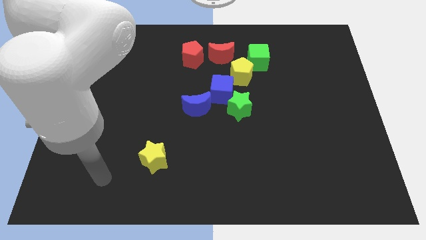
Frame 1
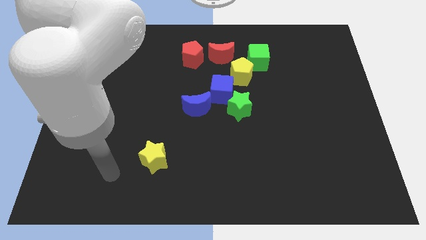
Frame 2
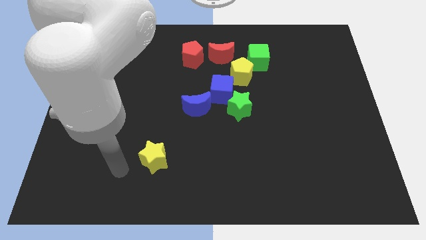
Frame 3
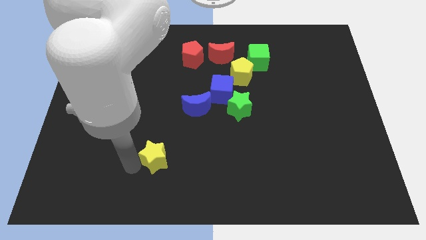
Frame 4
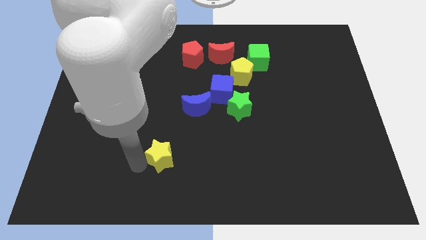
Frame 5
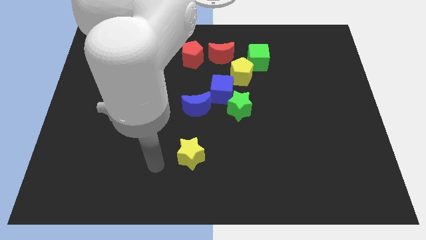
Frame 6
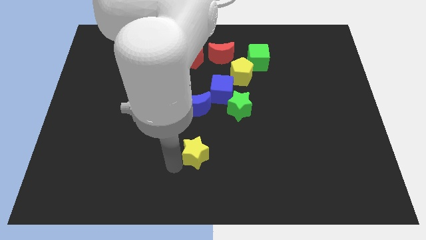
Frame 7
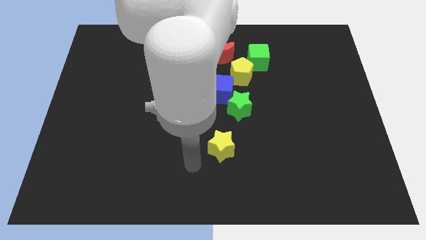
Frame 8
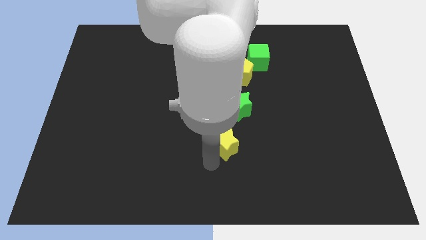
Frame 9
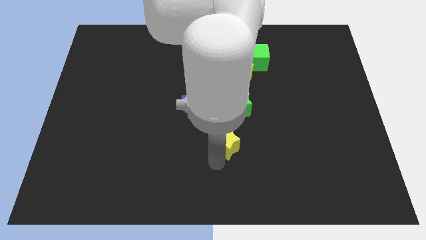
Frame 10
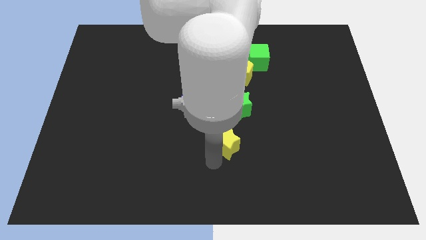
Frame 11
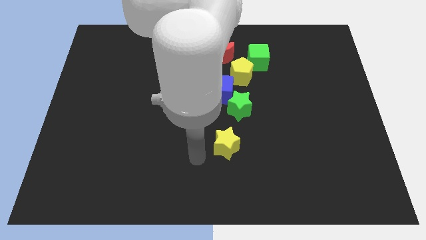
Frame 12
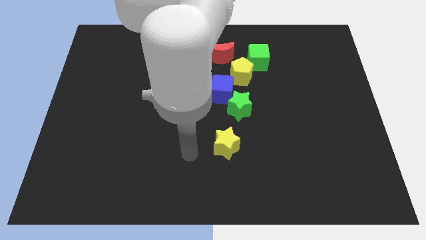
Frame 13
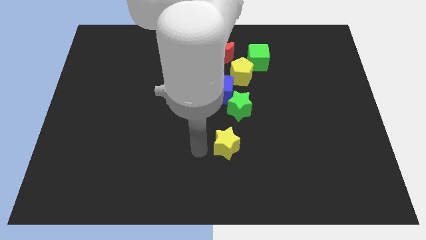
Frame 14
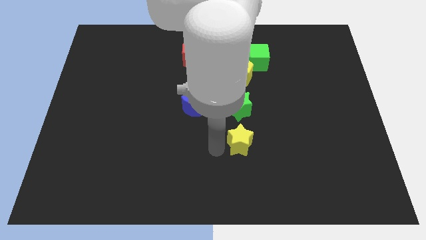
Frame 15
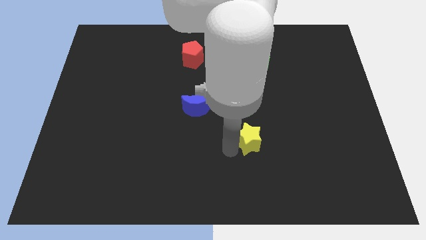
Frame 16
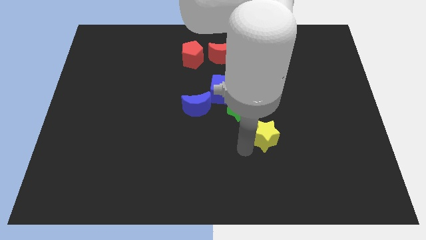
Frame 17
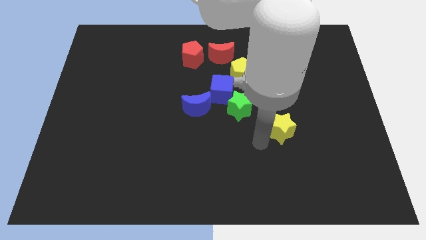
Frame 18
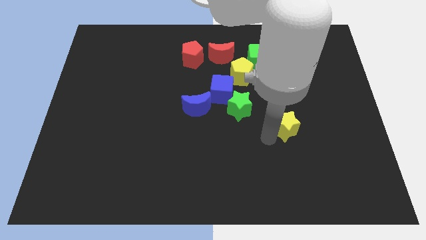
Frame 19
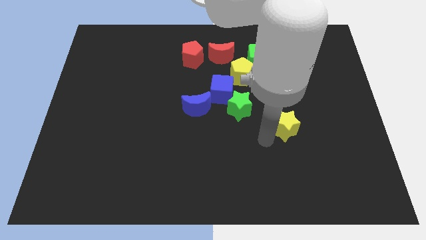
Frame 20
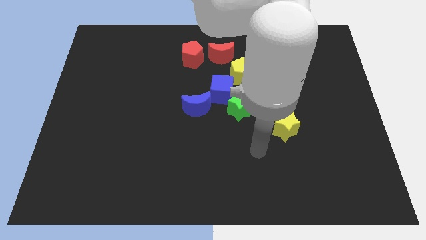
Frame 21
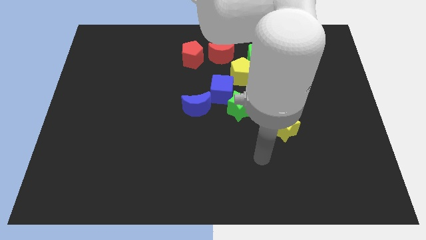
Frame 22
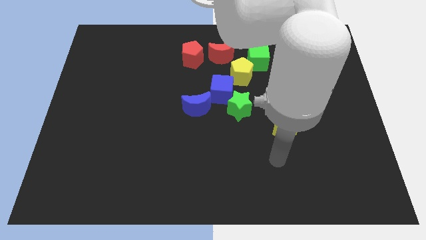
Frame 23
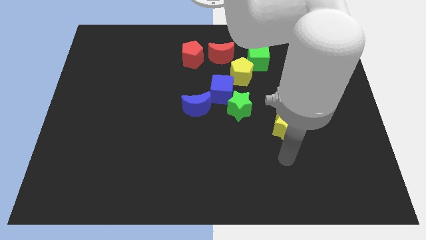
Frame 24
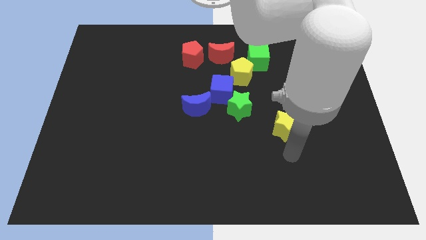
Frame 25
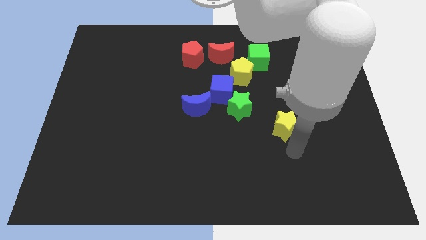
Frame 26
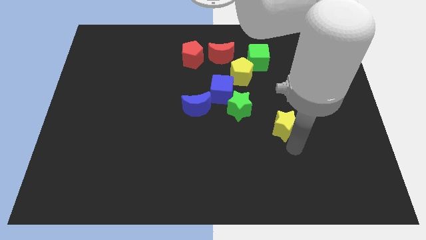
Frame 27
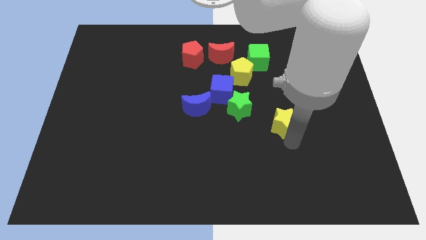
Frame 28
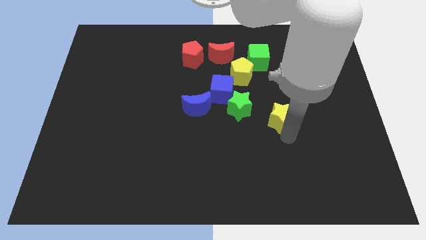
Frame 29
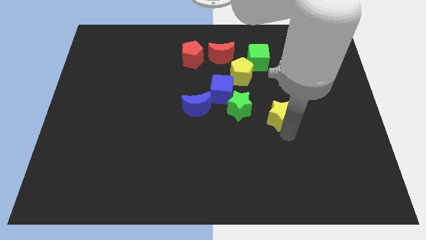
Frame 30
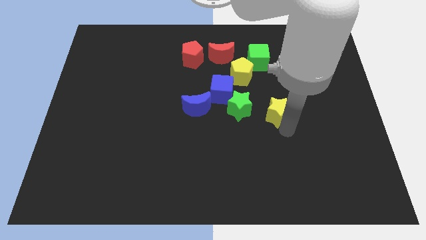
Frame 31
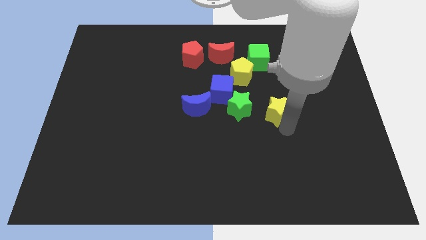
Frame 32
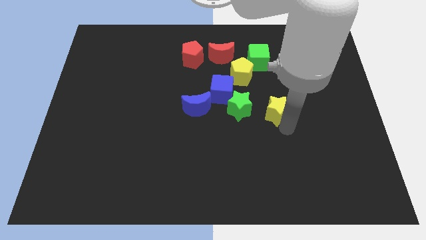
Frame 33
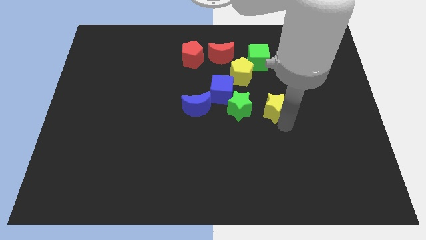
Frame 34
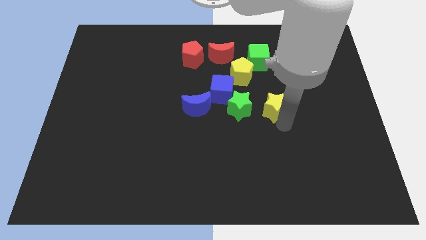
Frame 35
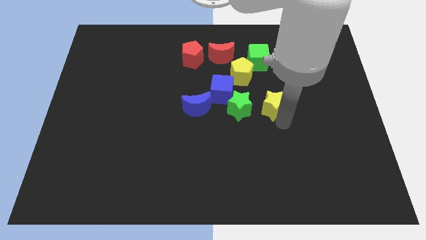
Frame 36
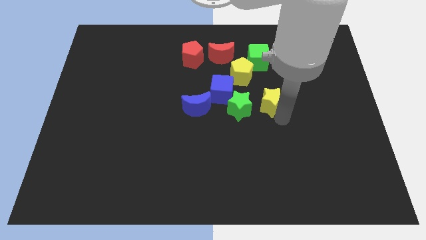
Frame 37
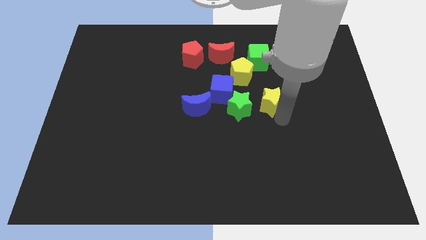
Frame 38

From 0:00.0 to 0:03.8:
move the yellow star to the right of the green star

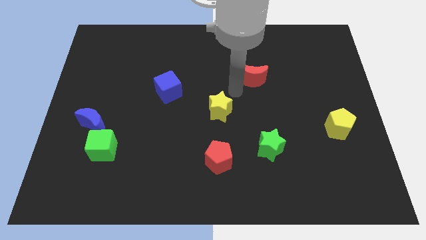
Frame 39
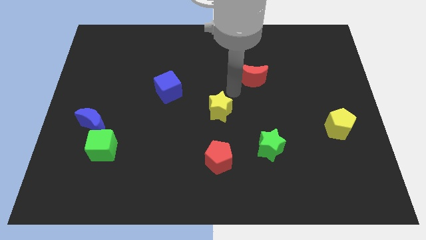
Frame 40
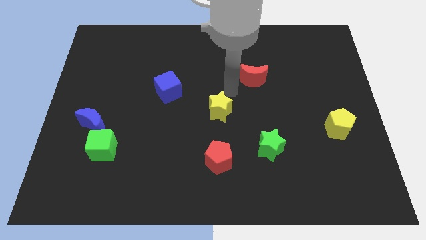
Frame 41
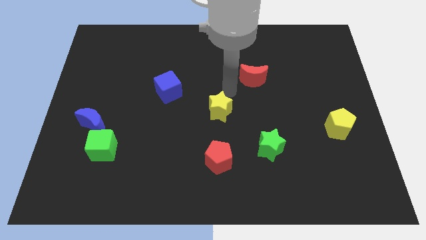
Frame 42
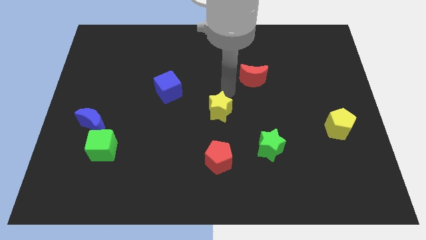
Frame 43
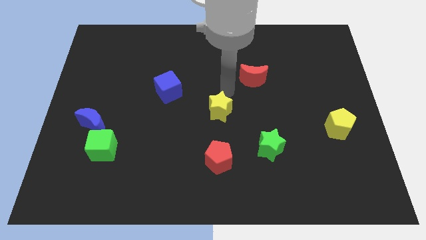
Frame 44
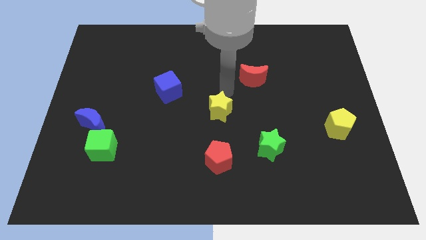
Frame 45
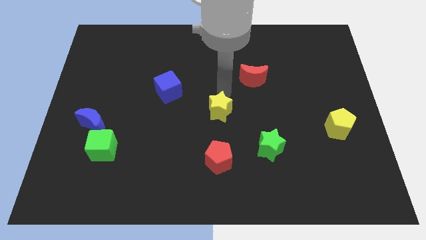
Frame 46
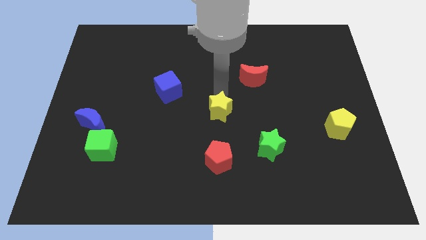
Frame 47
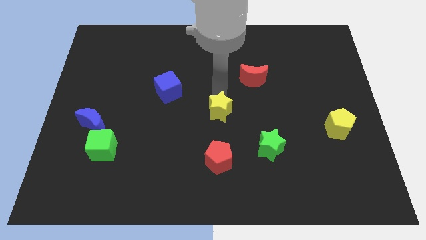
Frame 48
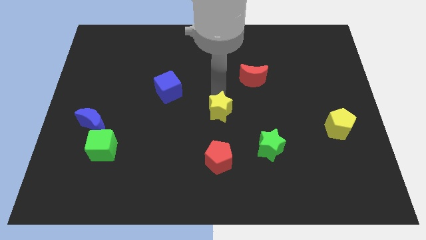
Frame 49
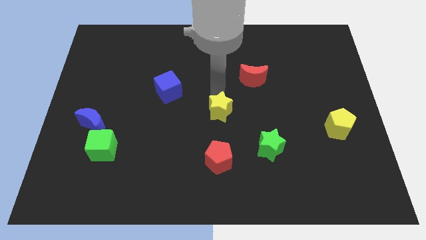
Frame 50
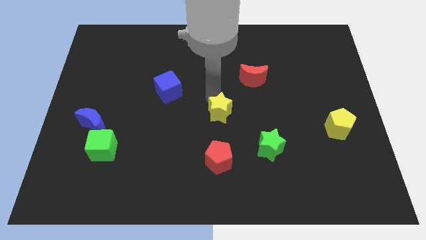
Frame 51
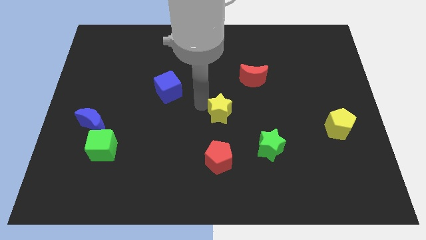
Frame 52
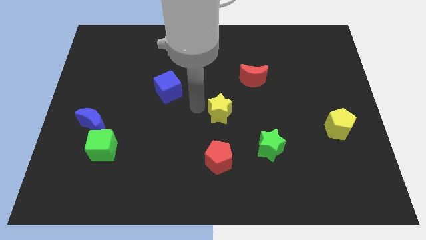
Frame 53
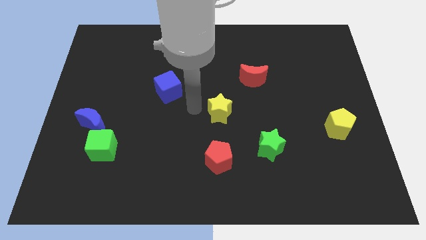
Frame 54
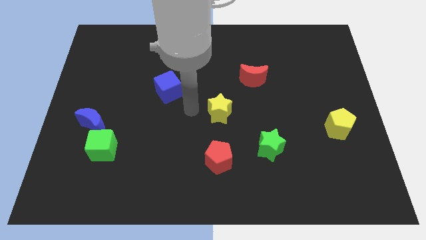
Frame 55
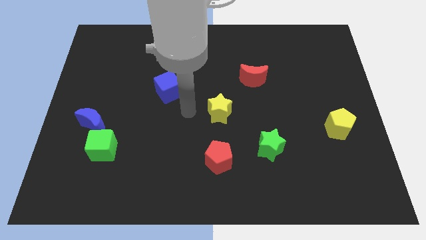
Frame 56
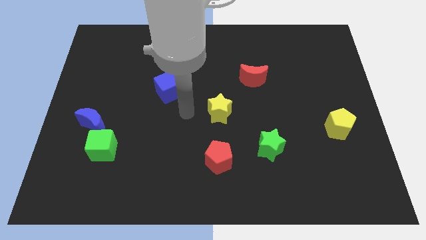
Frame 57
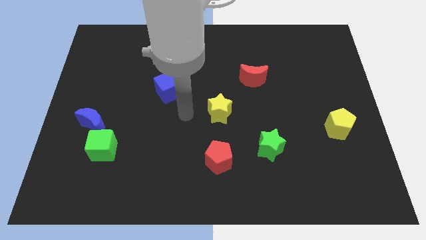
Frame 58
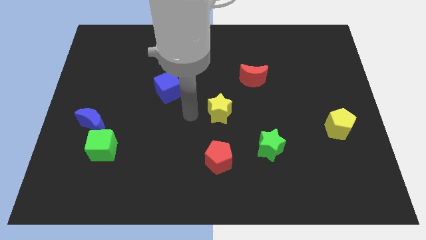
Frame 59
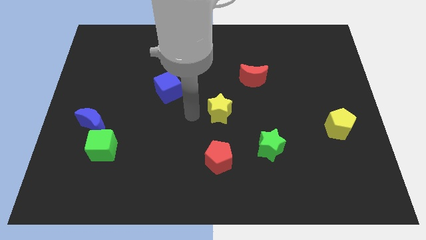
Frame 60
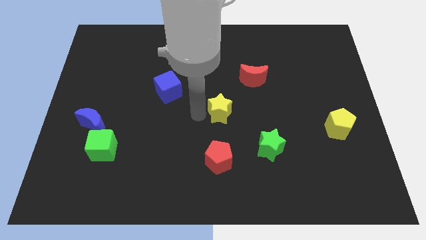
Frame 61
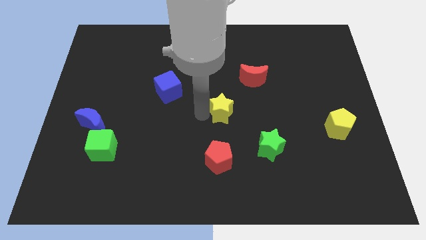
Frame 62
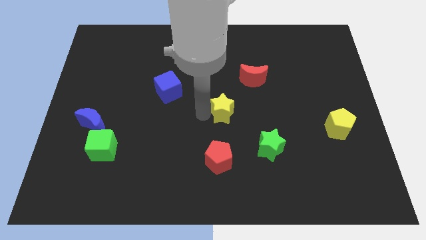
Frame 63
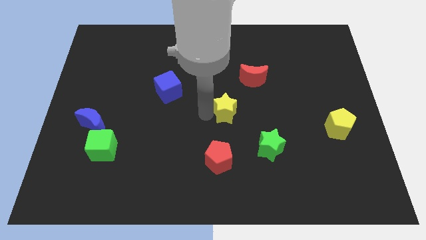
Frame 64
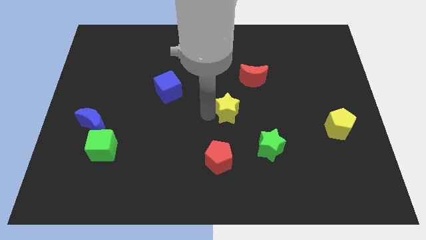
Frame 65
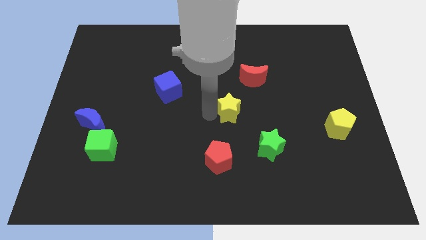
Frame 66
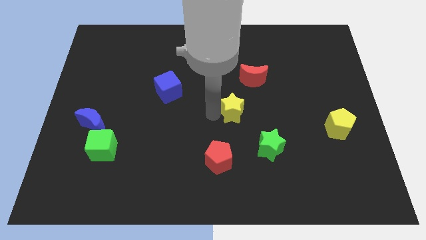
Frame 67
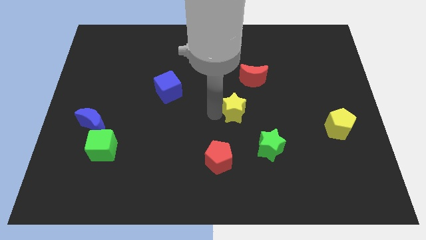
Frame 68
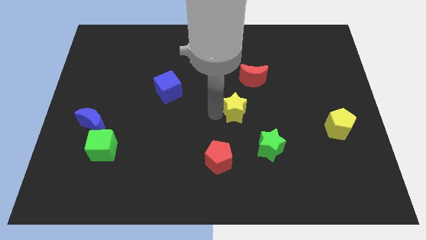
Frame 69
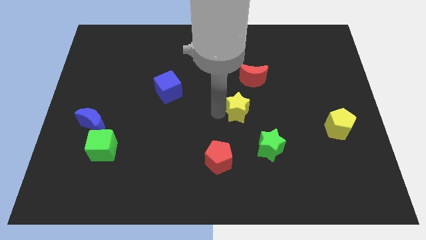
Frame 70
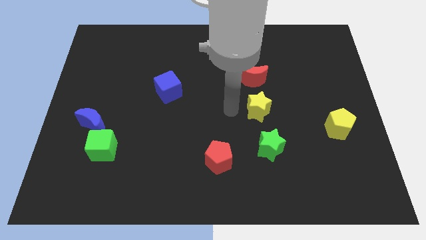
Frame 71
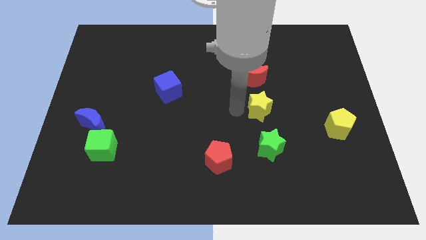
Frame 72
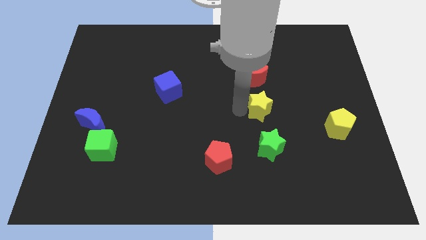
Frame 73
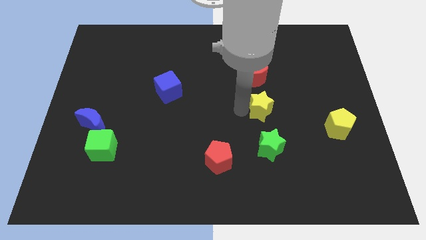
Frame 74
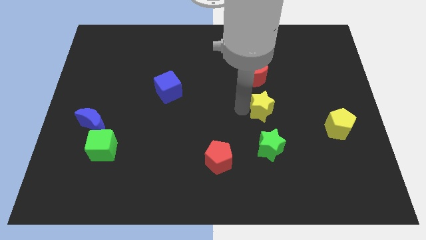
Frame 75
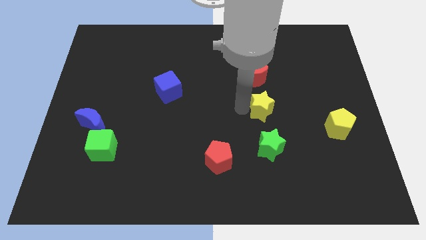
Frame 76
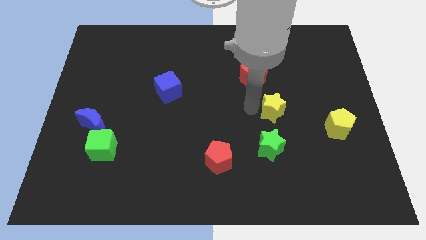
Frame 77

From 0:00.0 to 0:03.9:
push the yellow star in between green star and red moon

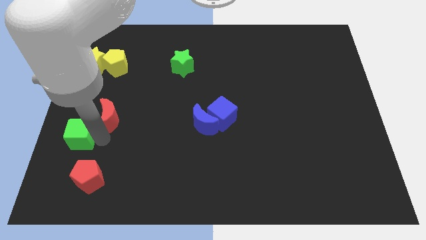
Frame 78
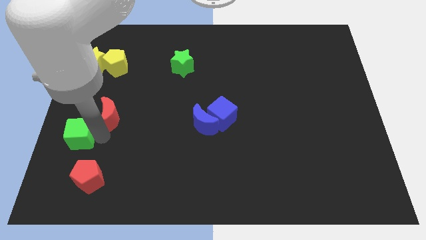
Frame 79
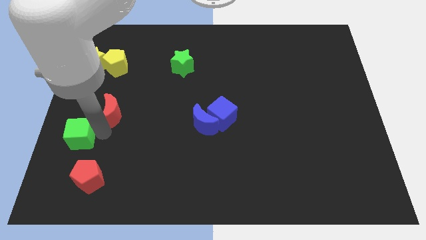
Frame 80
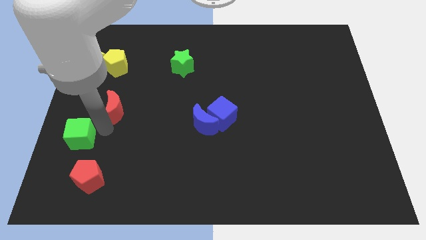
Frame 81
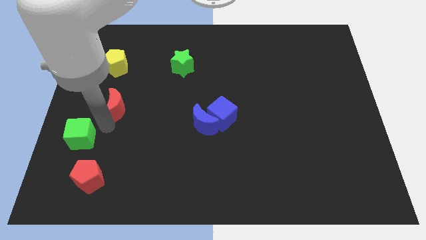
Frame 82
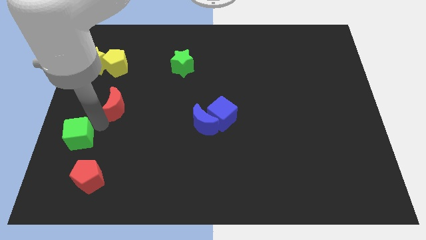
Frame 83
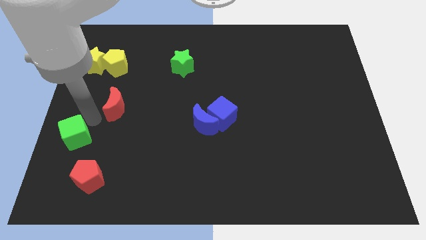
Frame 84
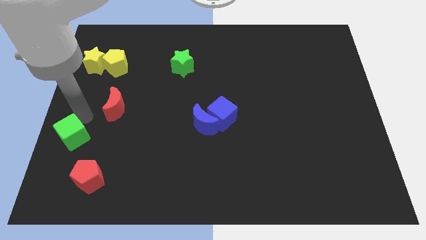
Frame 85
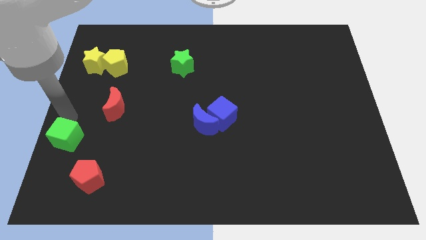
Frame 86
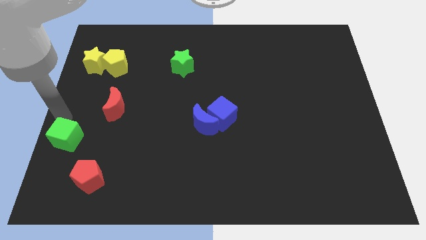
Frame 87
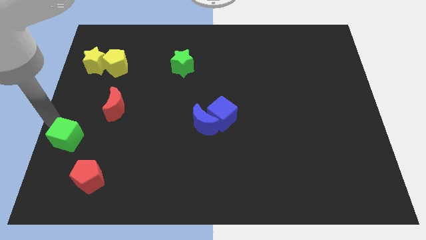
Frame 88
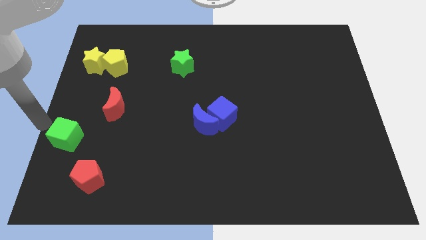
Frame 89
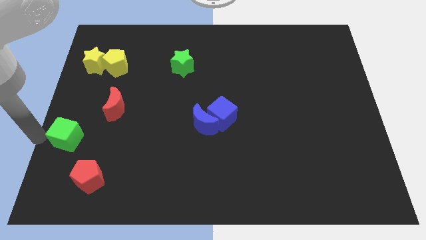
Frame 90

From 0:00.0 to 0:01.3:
push red moon away from the green cube
